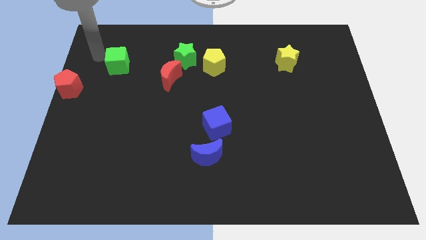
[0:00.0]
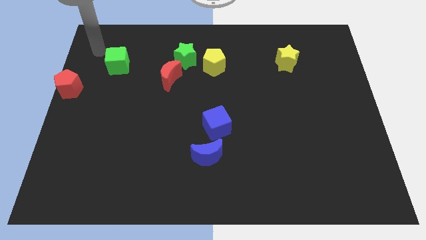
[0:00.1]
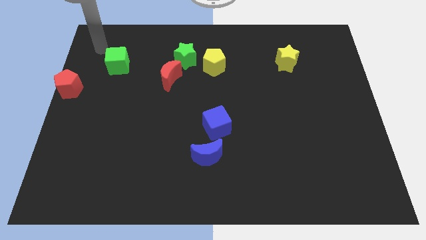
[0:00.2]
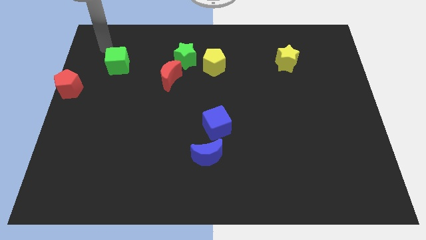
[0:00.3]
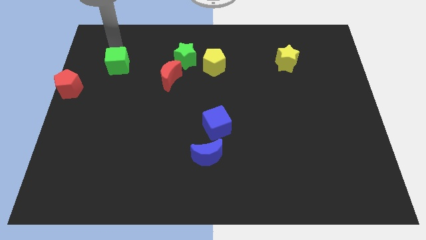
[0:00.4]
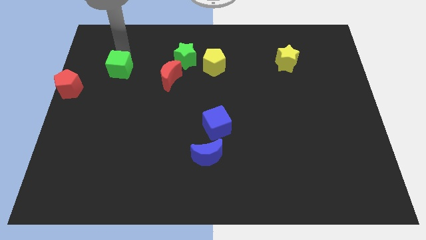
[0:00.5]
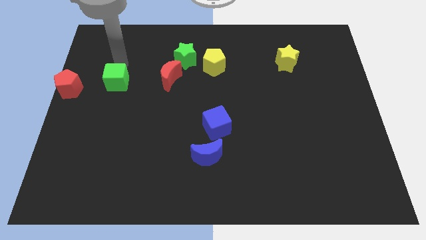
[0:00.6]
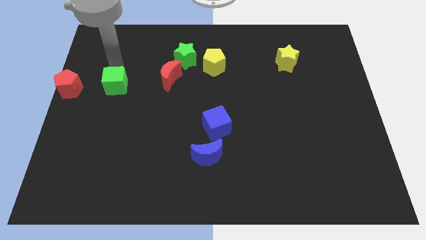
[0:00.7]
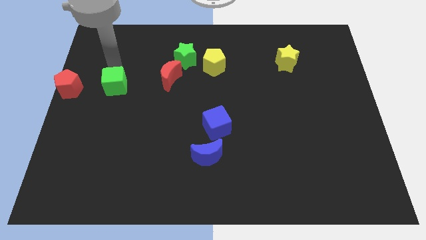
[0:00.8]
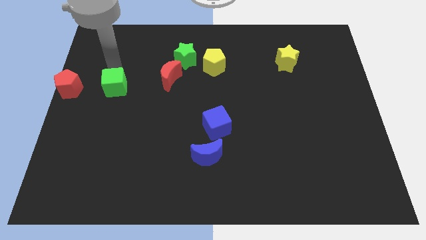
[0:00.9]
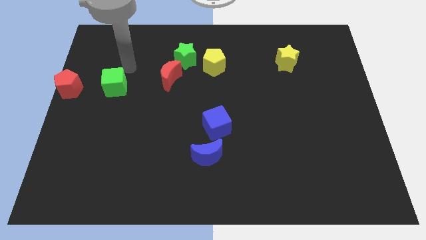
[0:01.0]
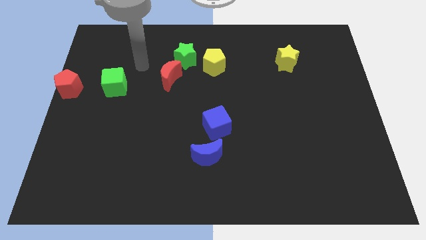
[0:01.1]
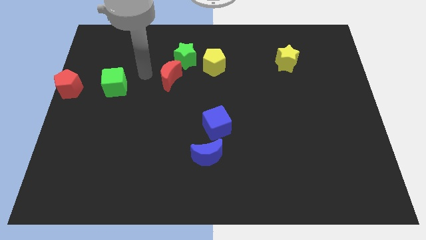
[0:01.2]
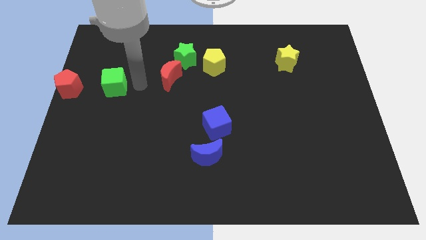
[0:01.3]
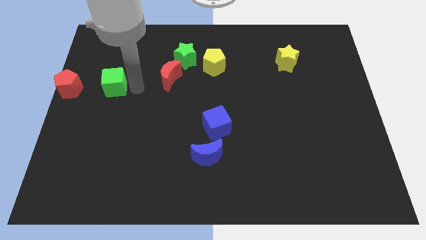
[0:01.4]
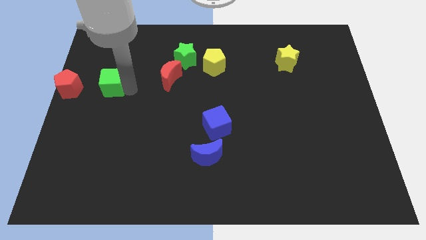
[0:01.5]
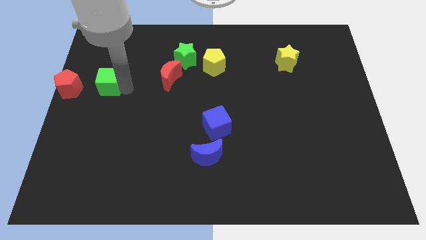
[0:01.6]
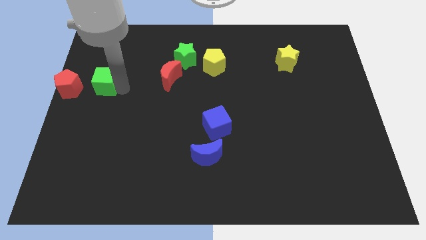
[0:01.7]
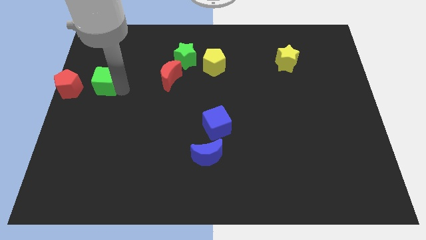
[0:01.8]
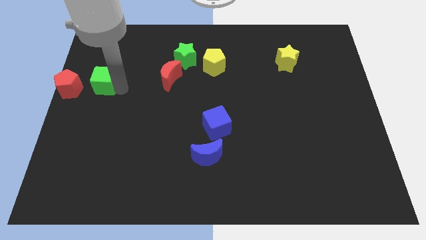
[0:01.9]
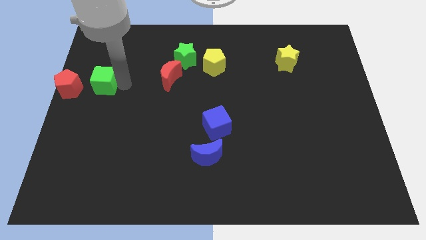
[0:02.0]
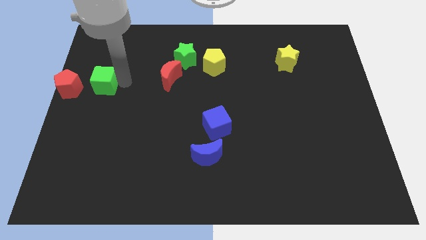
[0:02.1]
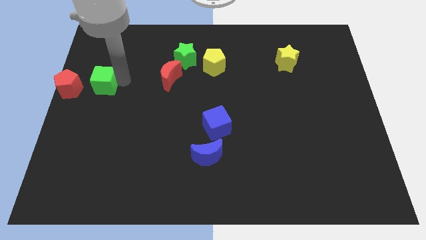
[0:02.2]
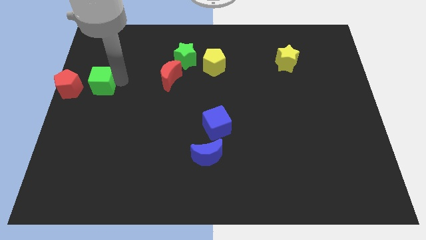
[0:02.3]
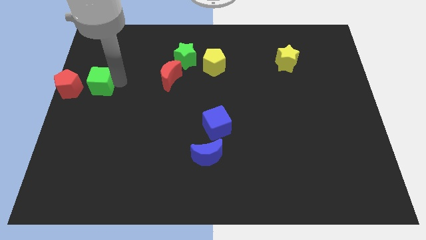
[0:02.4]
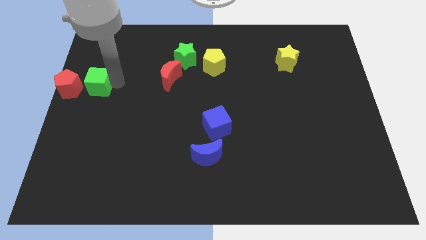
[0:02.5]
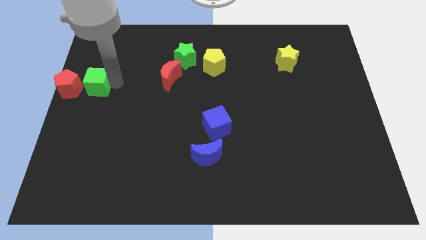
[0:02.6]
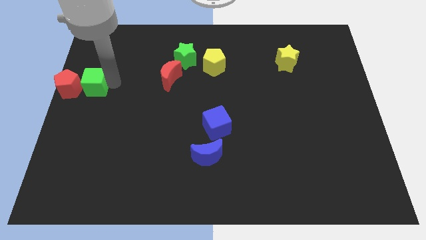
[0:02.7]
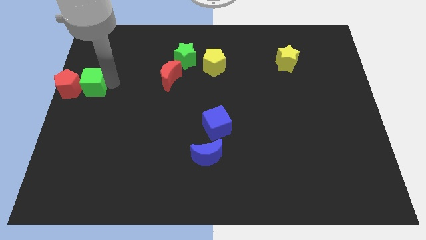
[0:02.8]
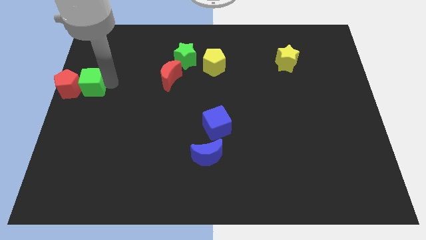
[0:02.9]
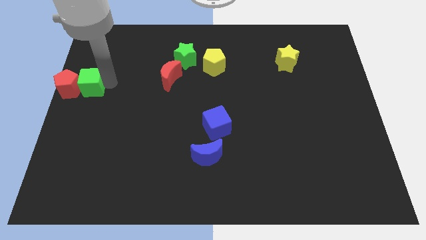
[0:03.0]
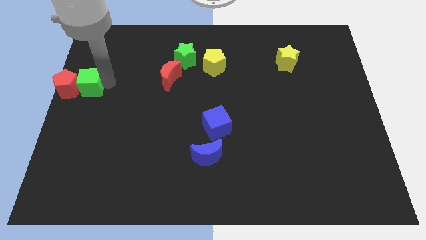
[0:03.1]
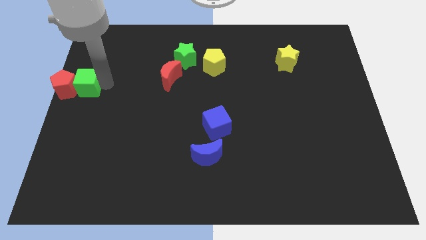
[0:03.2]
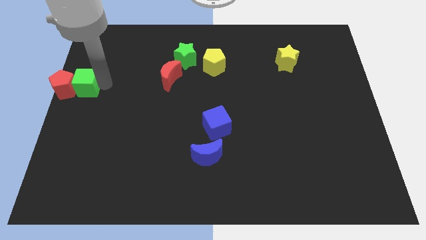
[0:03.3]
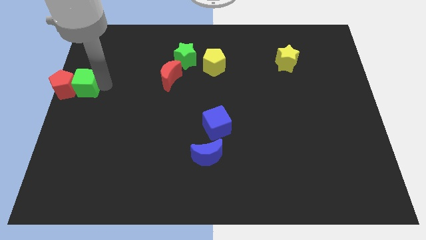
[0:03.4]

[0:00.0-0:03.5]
push the green cube into the red pentagon

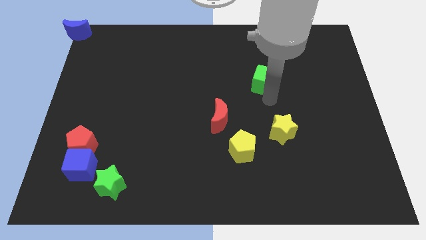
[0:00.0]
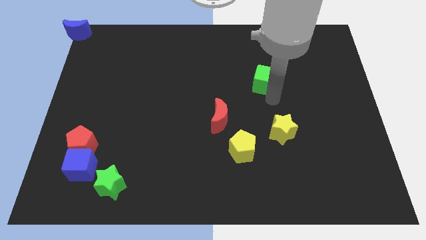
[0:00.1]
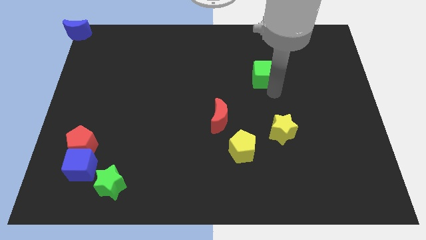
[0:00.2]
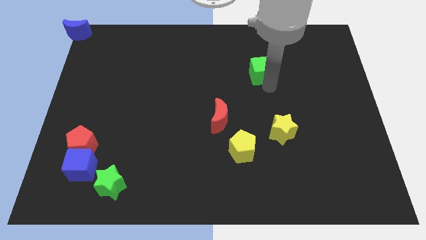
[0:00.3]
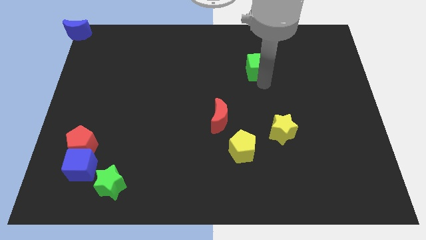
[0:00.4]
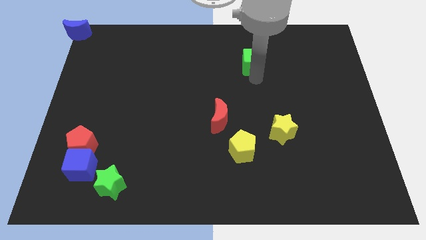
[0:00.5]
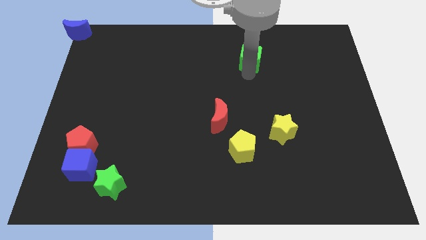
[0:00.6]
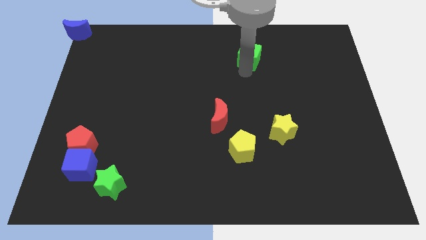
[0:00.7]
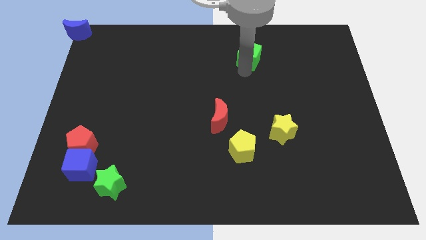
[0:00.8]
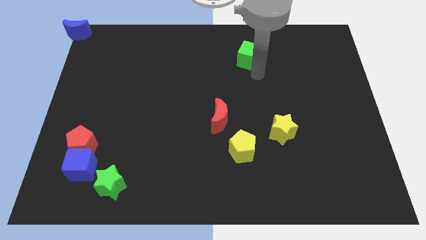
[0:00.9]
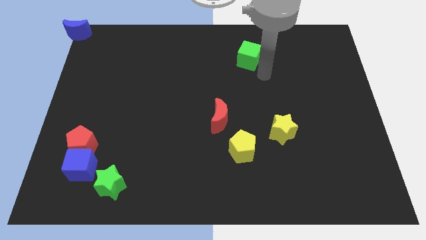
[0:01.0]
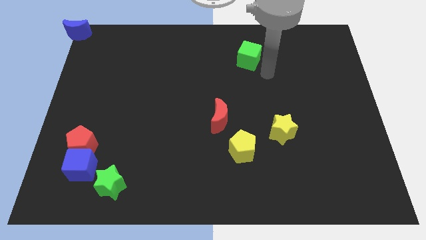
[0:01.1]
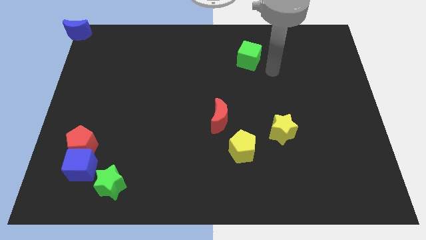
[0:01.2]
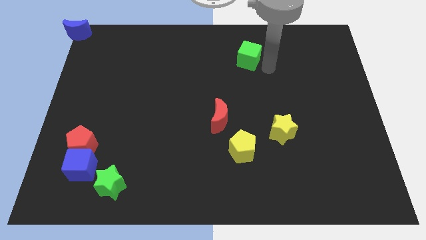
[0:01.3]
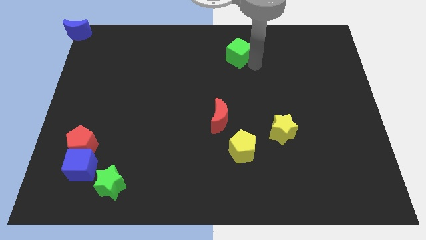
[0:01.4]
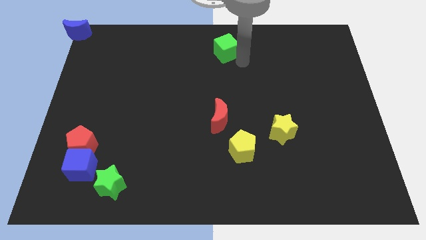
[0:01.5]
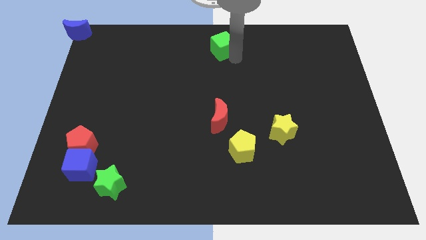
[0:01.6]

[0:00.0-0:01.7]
push the green cube towards the top center of the board

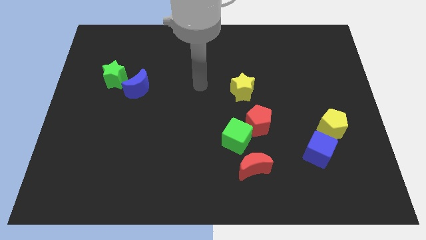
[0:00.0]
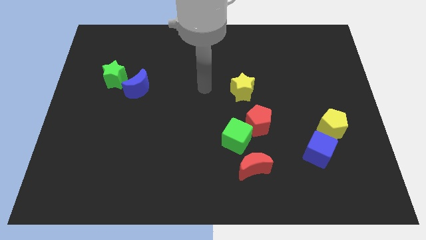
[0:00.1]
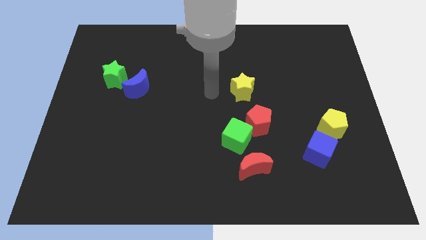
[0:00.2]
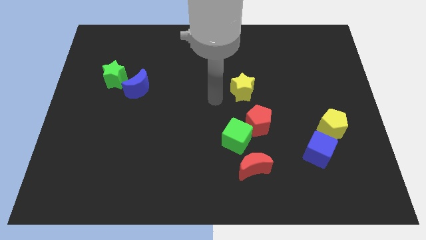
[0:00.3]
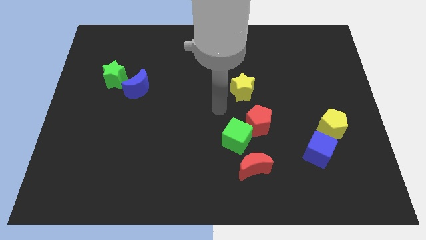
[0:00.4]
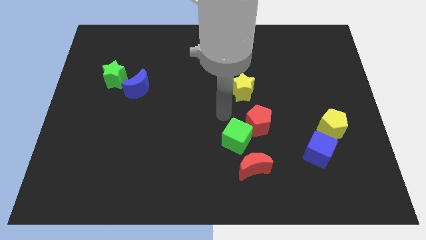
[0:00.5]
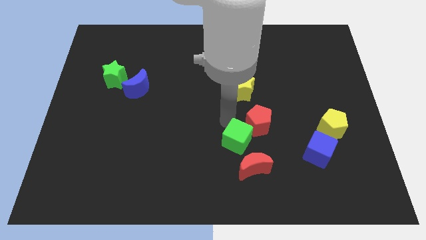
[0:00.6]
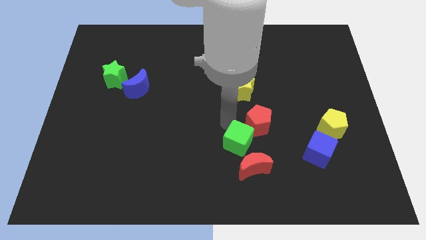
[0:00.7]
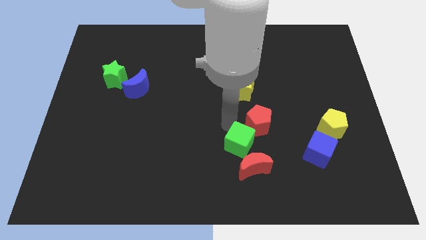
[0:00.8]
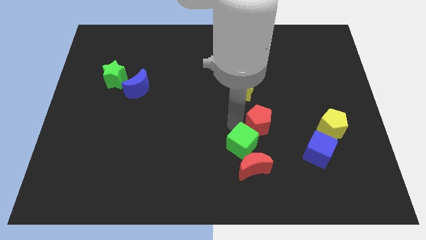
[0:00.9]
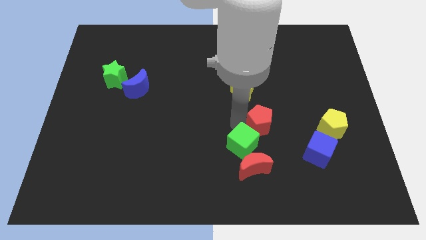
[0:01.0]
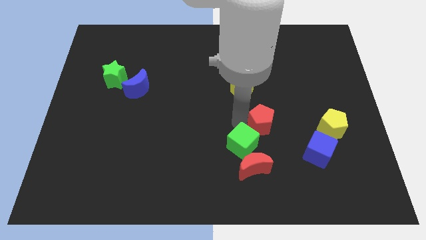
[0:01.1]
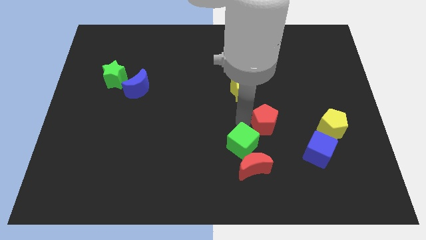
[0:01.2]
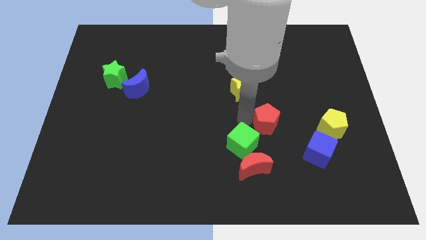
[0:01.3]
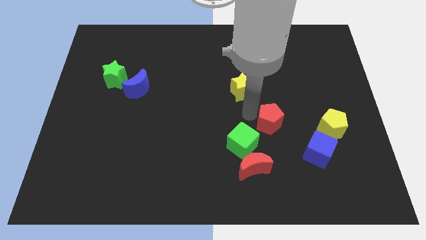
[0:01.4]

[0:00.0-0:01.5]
separate the red pentagon from the green cube

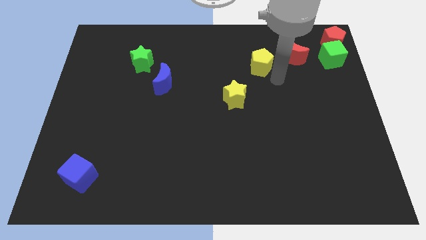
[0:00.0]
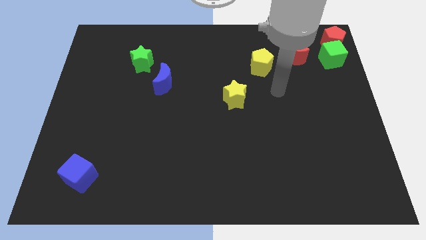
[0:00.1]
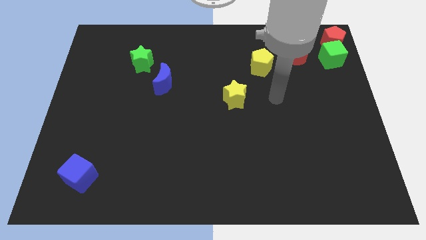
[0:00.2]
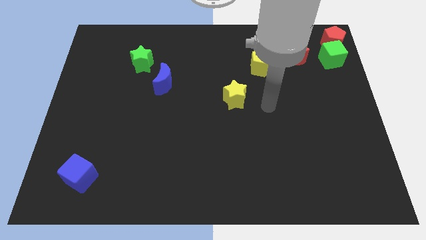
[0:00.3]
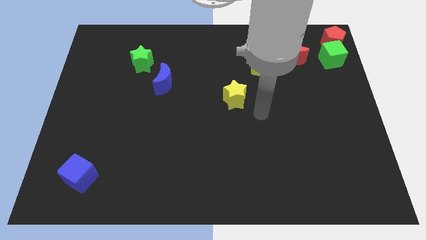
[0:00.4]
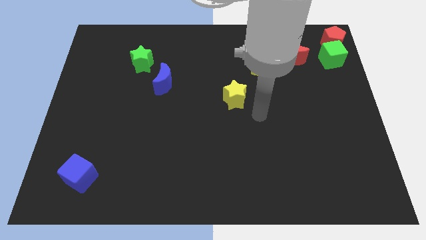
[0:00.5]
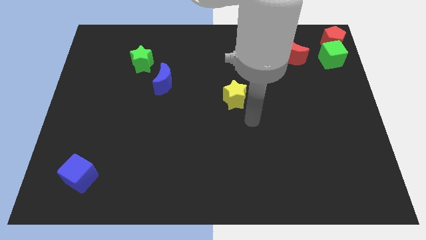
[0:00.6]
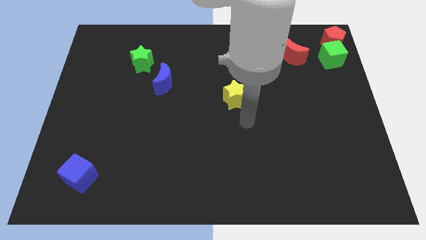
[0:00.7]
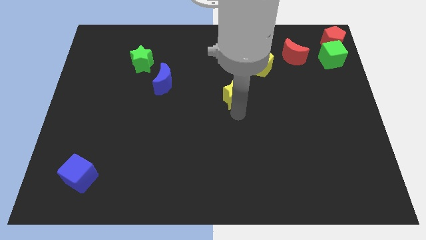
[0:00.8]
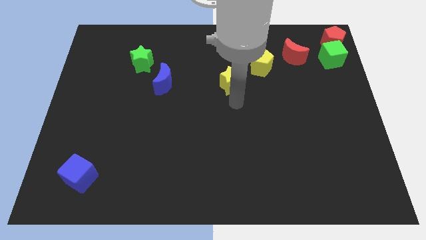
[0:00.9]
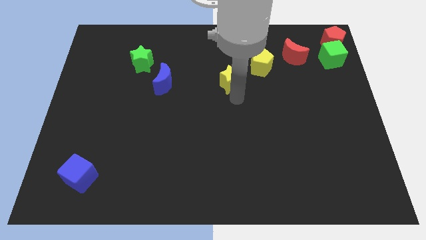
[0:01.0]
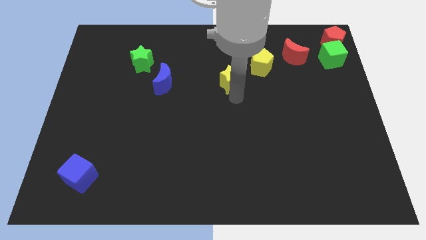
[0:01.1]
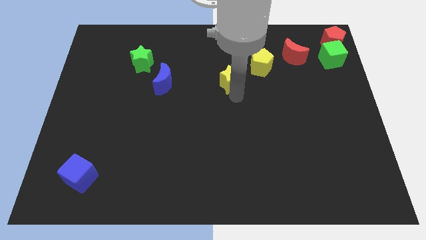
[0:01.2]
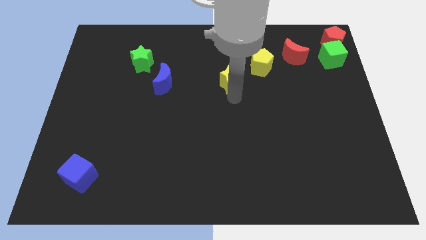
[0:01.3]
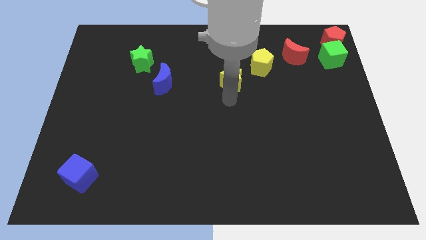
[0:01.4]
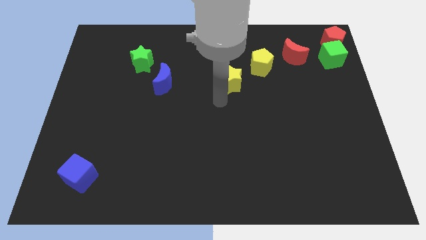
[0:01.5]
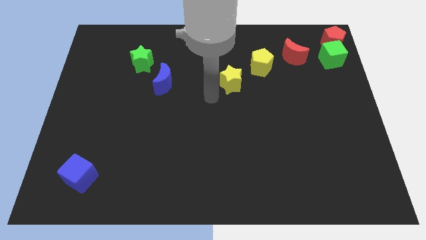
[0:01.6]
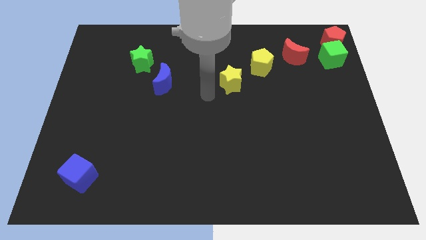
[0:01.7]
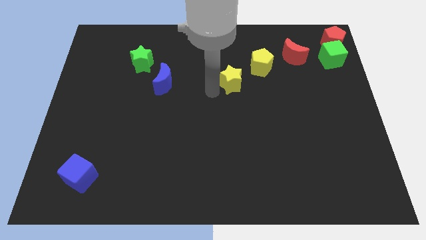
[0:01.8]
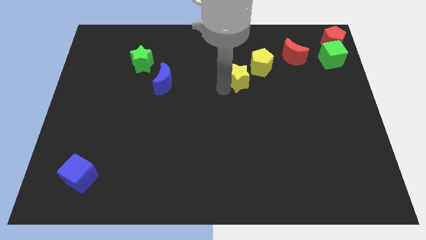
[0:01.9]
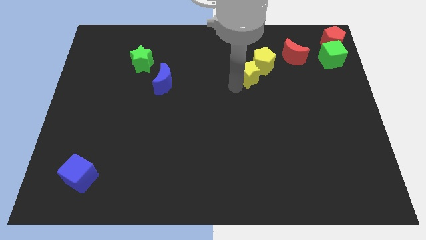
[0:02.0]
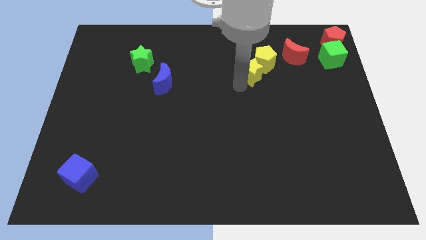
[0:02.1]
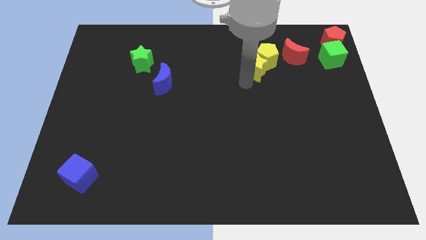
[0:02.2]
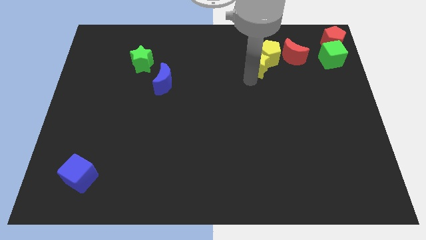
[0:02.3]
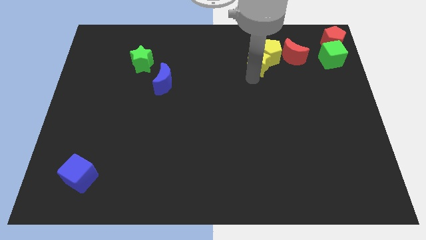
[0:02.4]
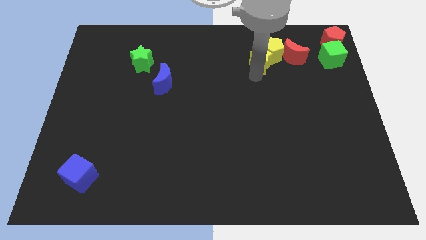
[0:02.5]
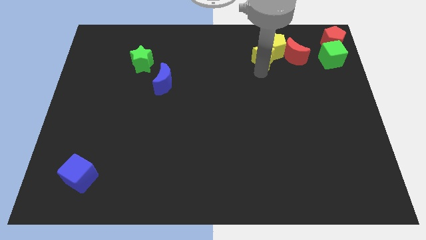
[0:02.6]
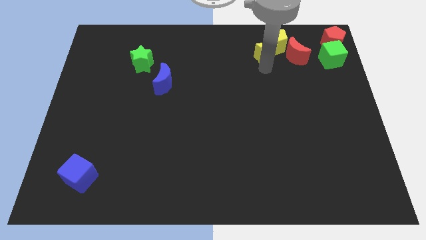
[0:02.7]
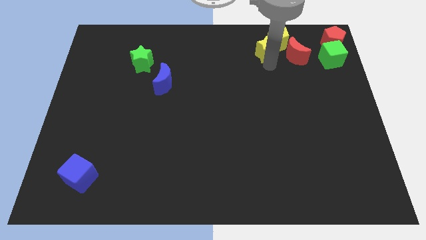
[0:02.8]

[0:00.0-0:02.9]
push the yellow star into the yellow pentagon
